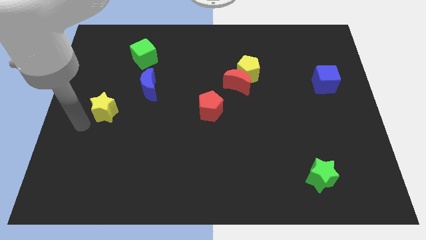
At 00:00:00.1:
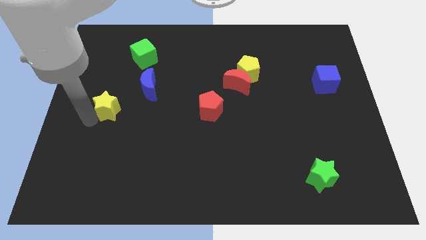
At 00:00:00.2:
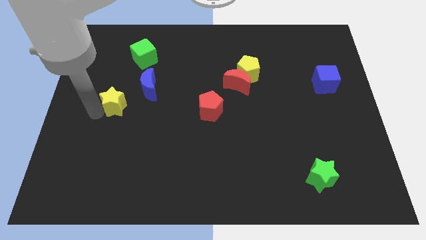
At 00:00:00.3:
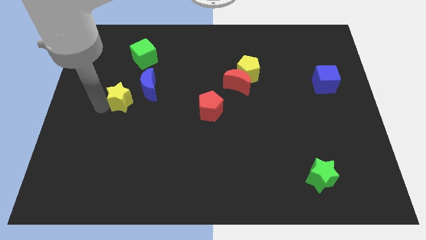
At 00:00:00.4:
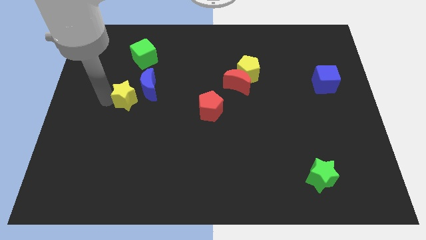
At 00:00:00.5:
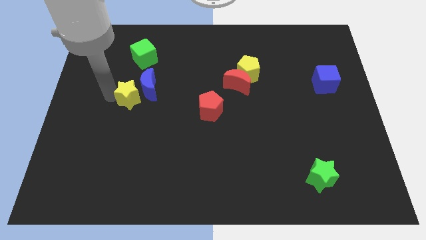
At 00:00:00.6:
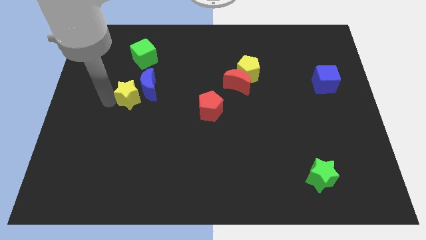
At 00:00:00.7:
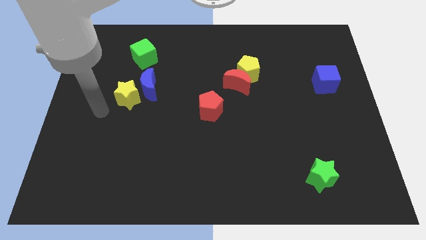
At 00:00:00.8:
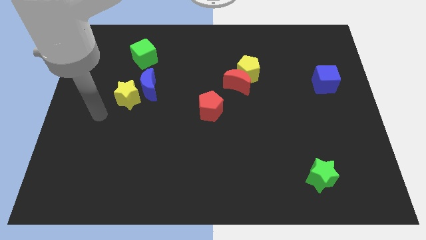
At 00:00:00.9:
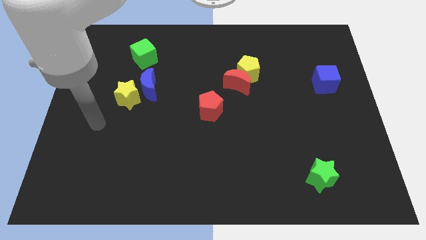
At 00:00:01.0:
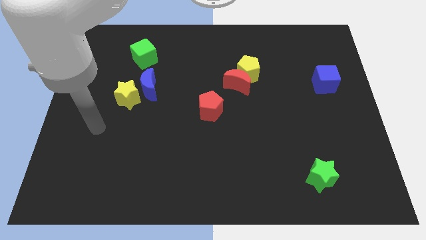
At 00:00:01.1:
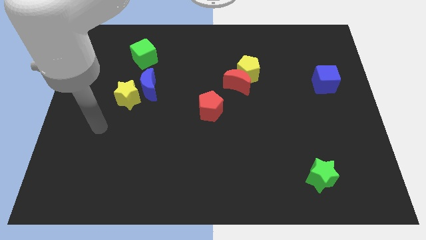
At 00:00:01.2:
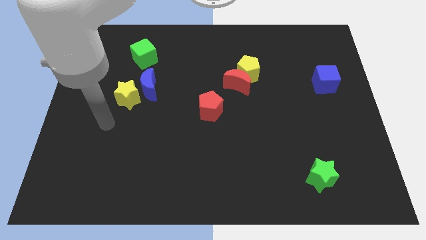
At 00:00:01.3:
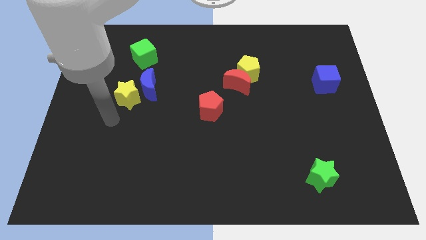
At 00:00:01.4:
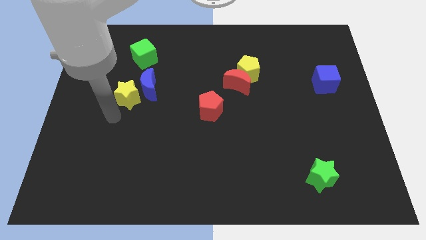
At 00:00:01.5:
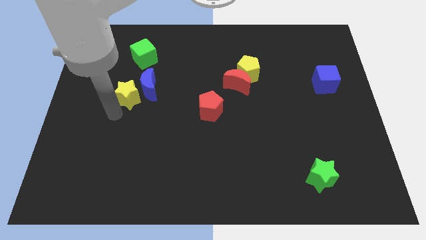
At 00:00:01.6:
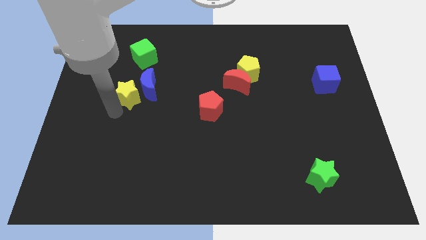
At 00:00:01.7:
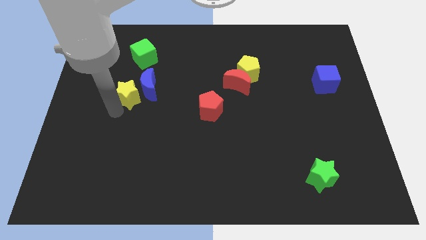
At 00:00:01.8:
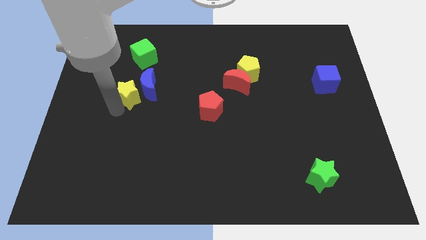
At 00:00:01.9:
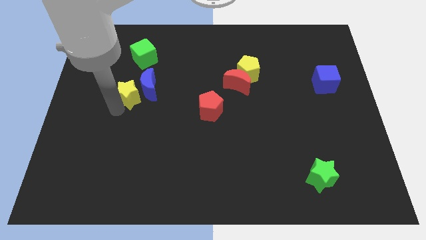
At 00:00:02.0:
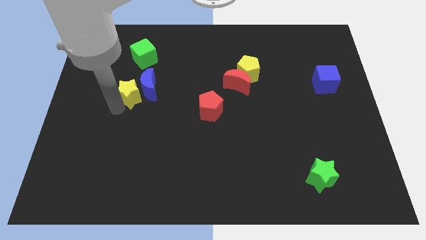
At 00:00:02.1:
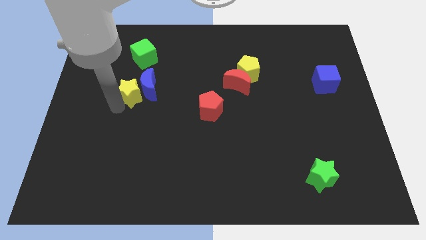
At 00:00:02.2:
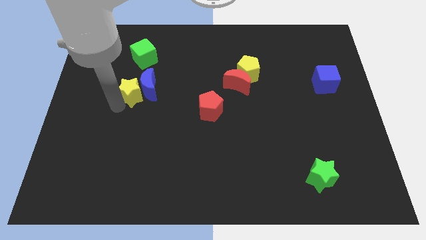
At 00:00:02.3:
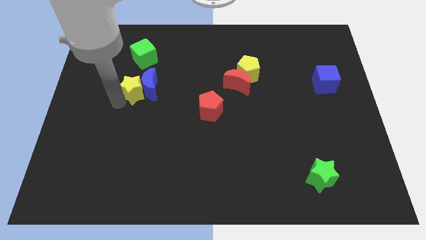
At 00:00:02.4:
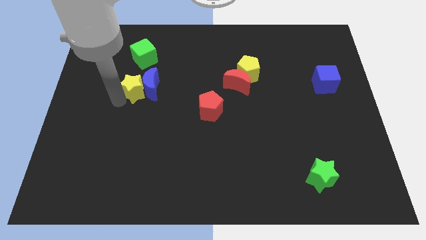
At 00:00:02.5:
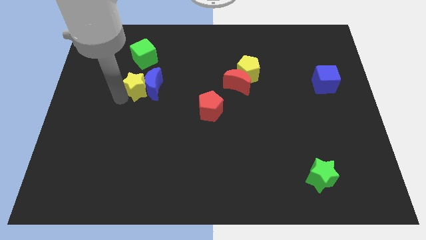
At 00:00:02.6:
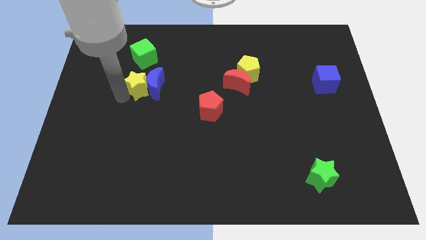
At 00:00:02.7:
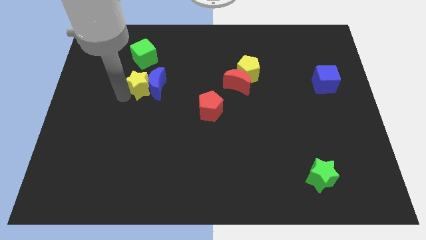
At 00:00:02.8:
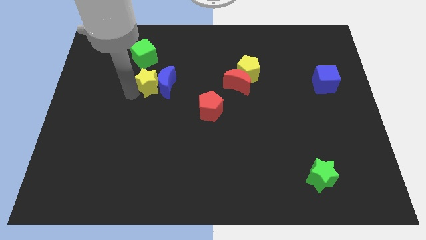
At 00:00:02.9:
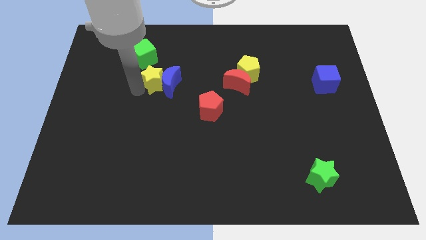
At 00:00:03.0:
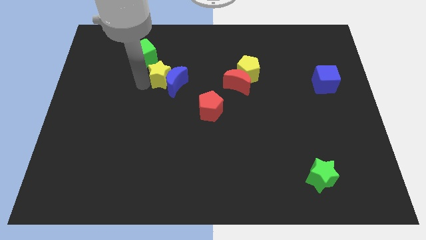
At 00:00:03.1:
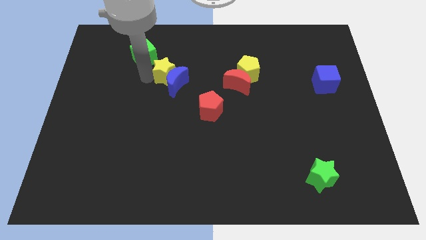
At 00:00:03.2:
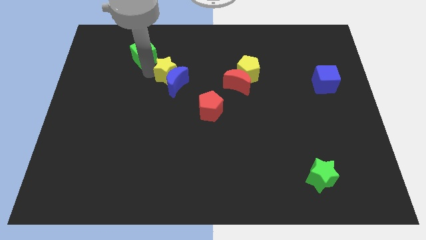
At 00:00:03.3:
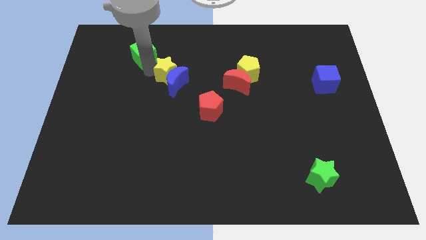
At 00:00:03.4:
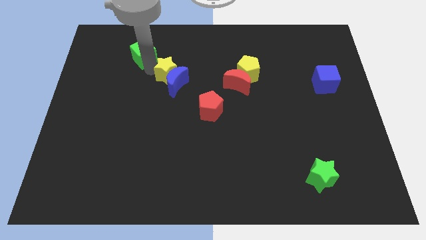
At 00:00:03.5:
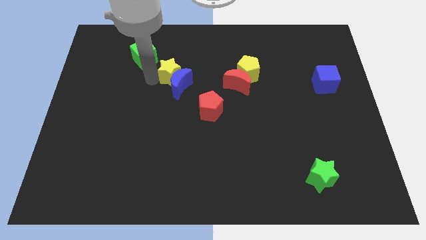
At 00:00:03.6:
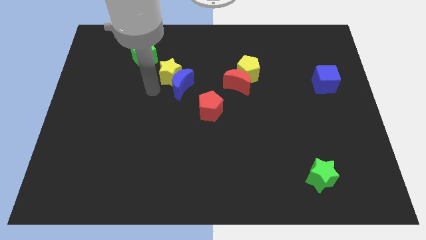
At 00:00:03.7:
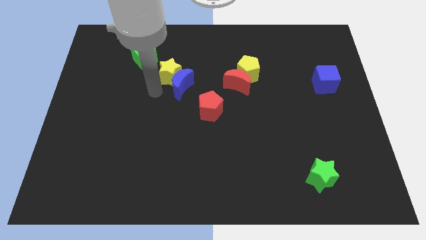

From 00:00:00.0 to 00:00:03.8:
move the yellow star into the blue moon

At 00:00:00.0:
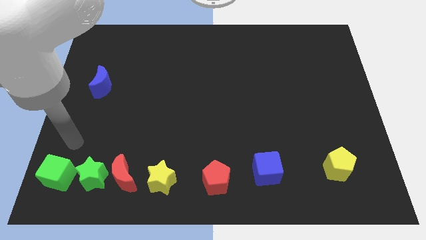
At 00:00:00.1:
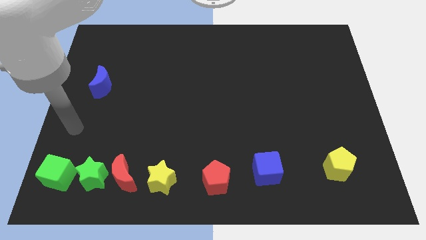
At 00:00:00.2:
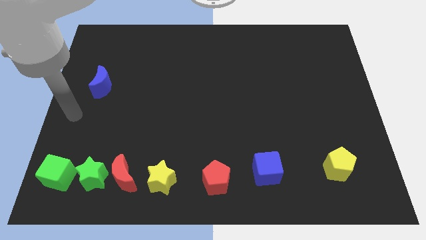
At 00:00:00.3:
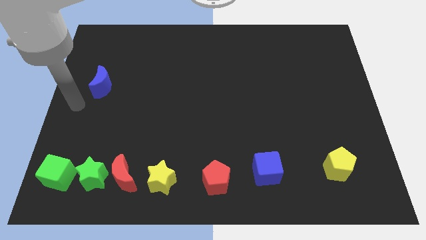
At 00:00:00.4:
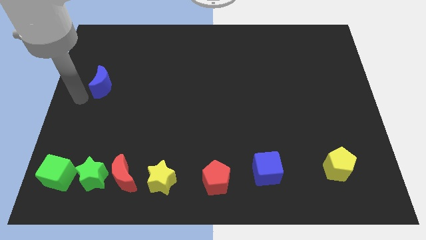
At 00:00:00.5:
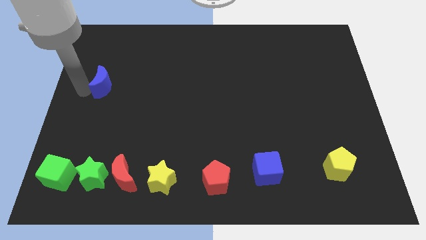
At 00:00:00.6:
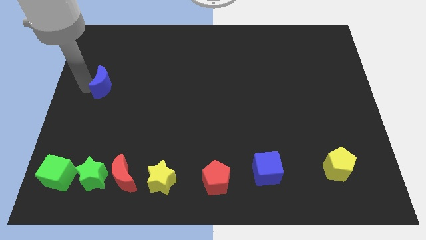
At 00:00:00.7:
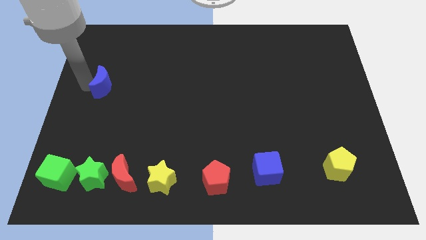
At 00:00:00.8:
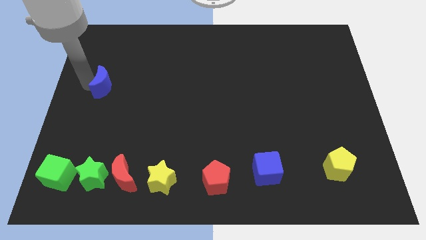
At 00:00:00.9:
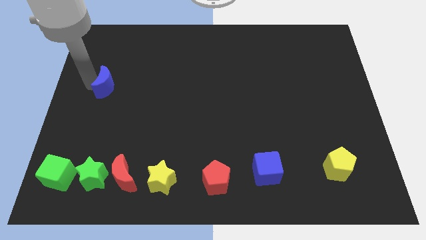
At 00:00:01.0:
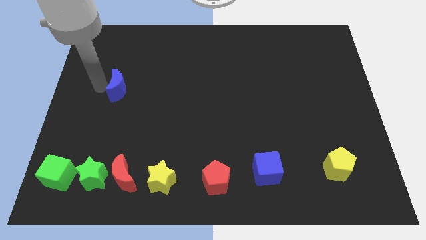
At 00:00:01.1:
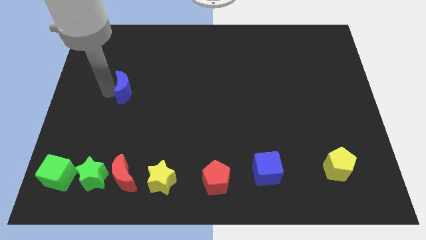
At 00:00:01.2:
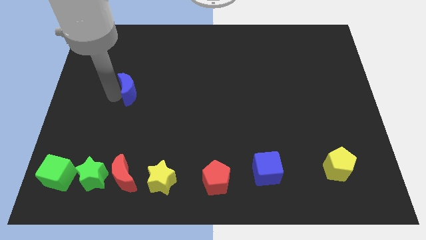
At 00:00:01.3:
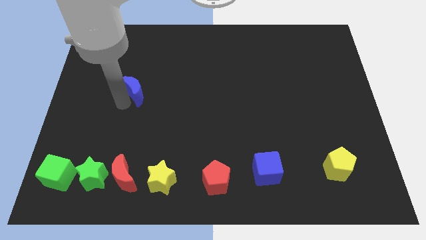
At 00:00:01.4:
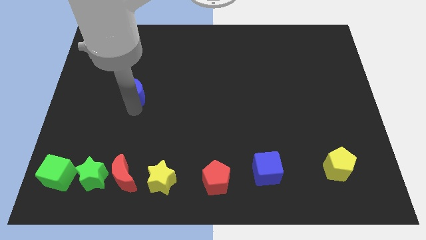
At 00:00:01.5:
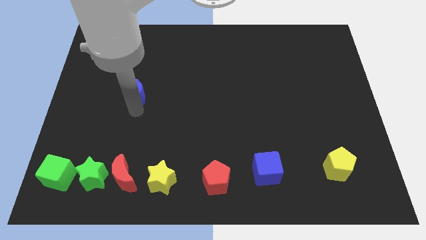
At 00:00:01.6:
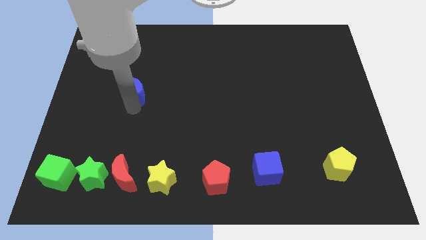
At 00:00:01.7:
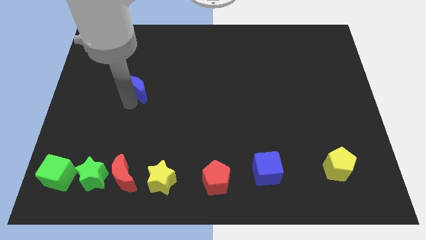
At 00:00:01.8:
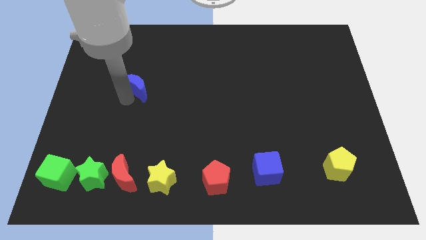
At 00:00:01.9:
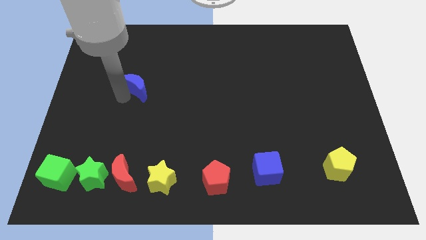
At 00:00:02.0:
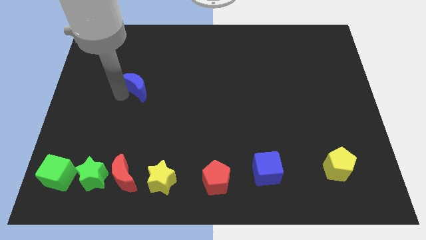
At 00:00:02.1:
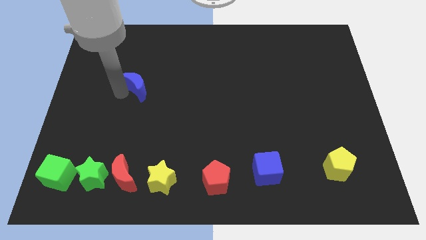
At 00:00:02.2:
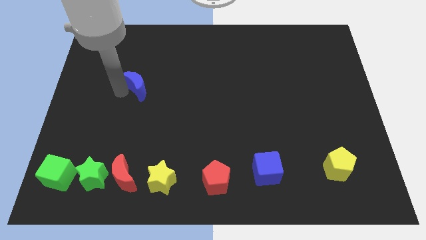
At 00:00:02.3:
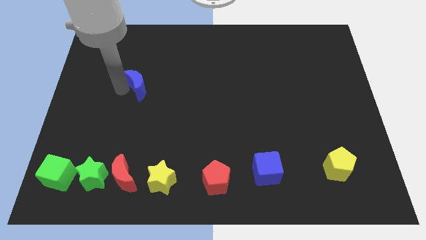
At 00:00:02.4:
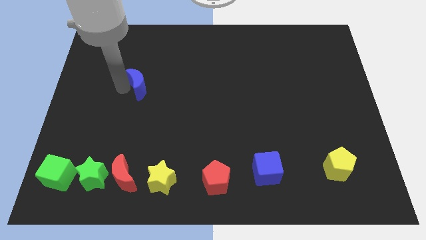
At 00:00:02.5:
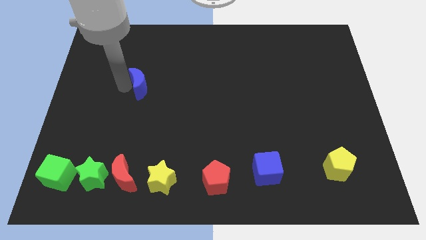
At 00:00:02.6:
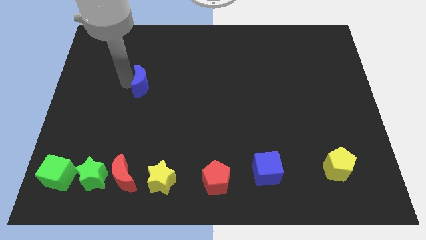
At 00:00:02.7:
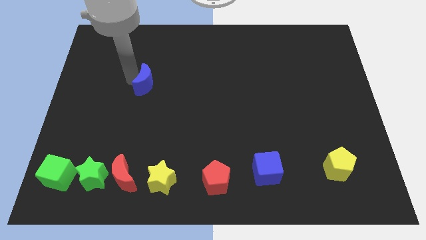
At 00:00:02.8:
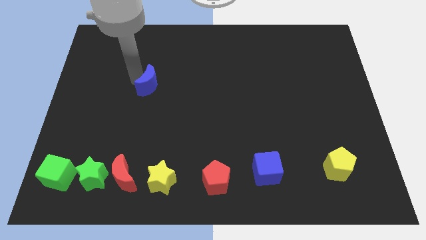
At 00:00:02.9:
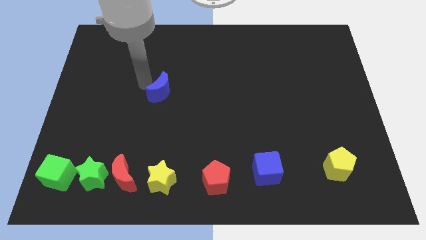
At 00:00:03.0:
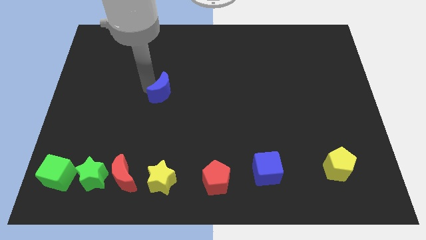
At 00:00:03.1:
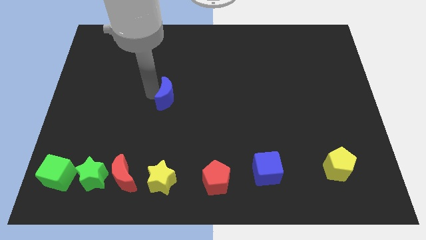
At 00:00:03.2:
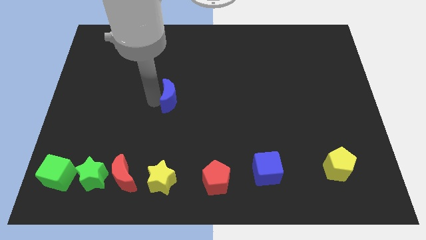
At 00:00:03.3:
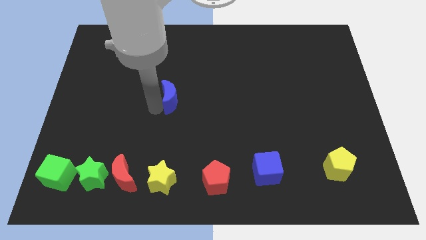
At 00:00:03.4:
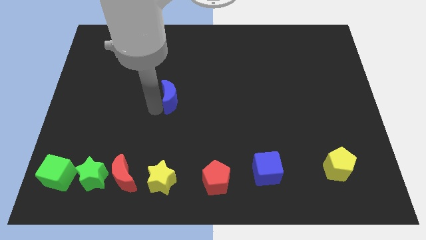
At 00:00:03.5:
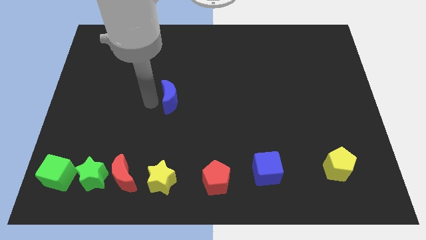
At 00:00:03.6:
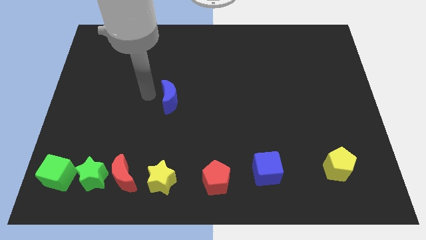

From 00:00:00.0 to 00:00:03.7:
move the blue crescent to the center of the board

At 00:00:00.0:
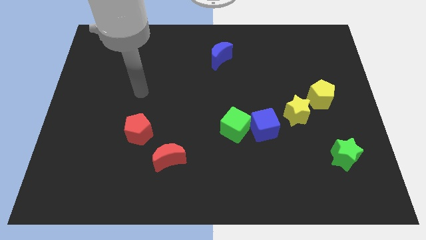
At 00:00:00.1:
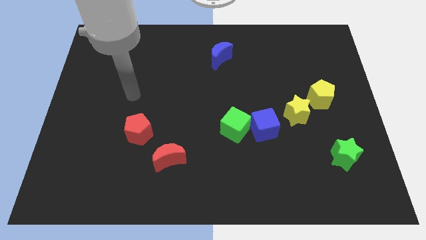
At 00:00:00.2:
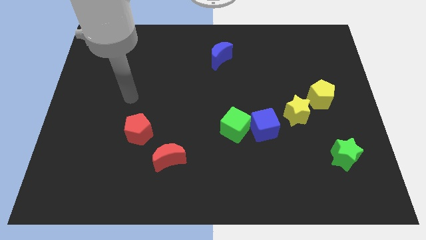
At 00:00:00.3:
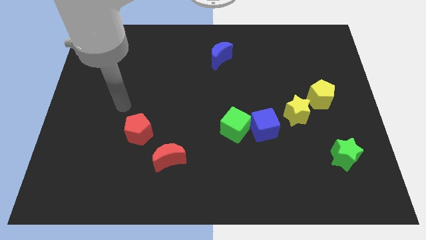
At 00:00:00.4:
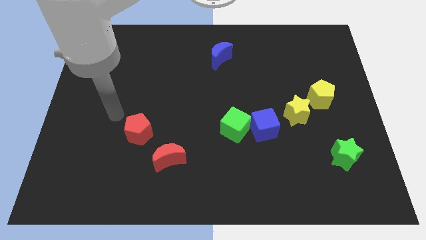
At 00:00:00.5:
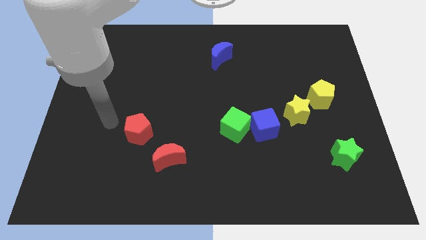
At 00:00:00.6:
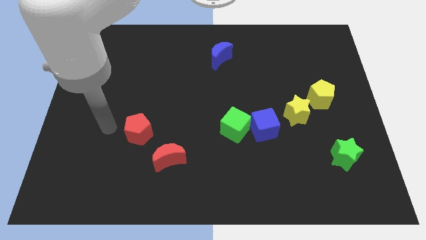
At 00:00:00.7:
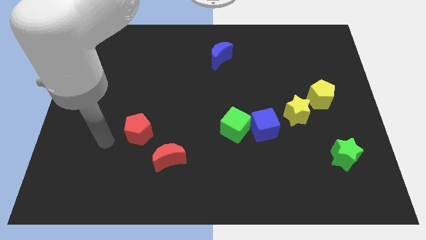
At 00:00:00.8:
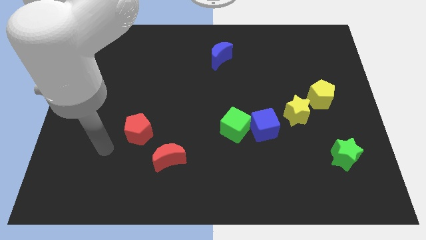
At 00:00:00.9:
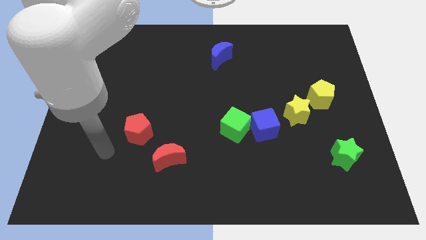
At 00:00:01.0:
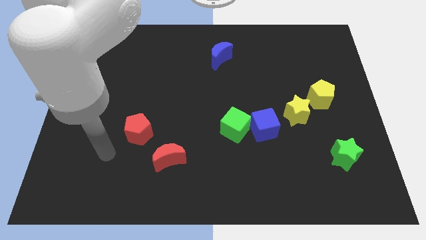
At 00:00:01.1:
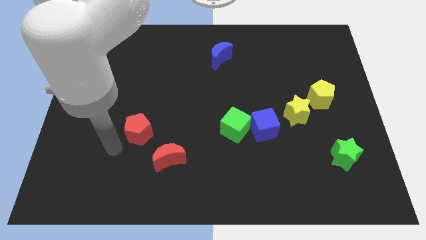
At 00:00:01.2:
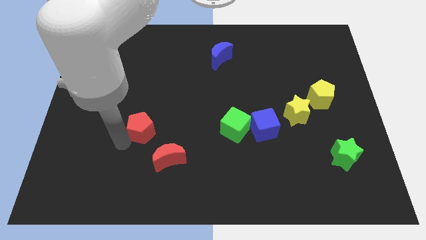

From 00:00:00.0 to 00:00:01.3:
tap the bottom left of the red pentagon
